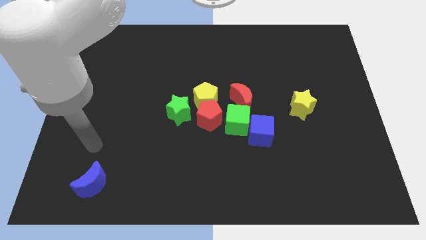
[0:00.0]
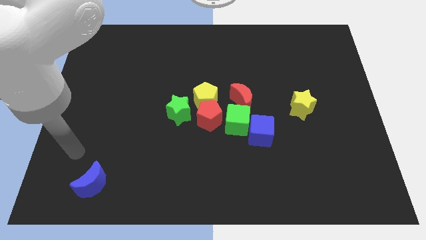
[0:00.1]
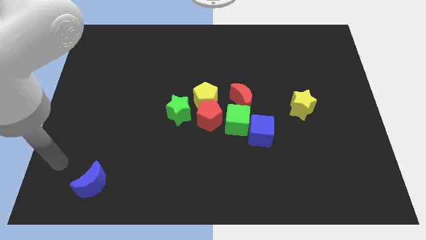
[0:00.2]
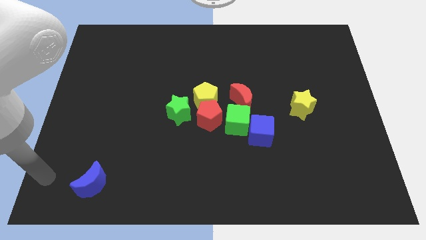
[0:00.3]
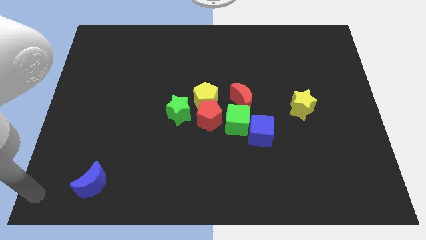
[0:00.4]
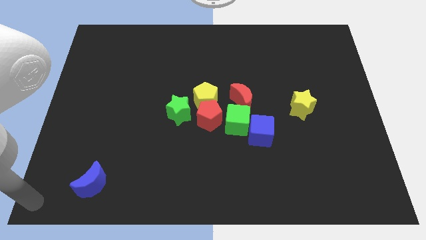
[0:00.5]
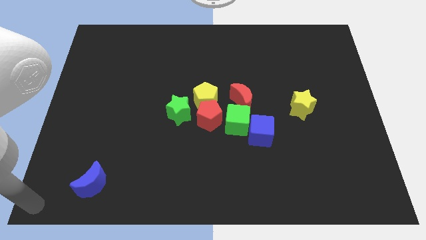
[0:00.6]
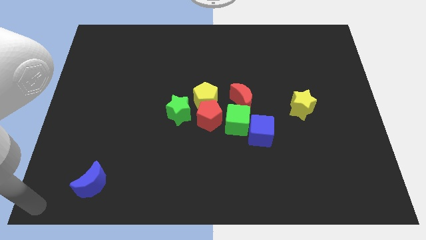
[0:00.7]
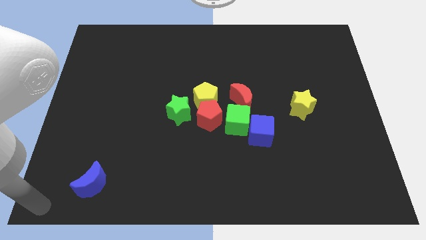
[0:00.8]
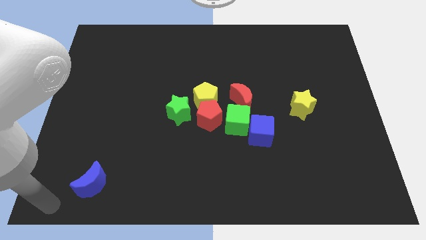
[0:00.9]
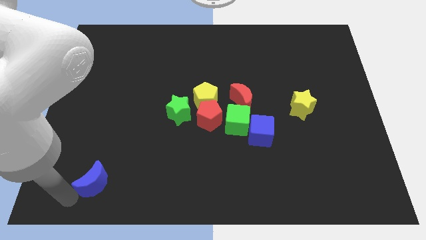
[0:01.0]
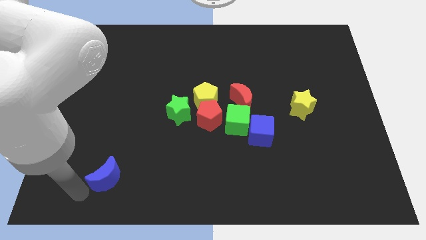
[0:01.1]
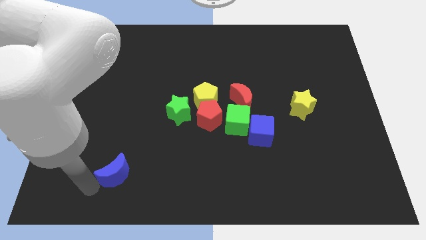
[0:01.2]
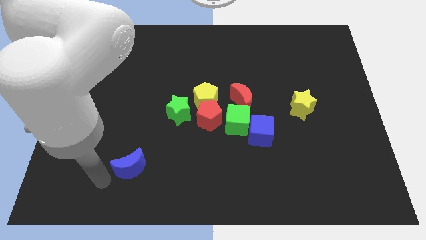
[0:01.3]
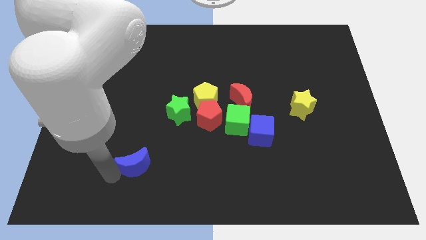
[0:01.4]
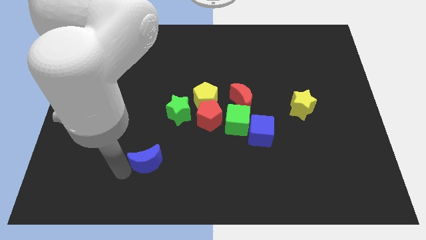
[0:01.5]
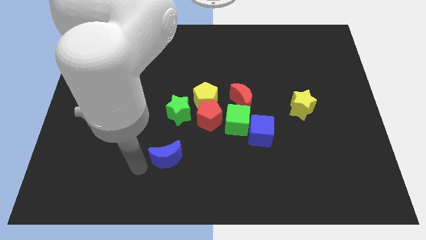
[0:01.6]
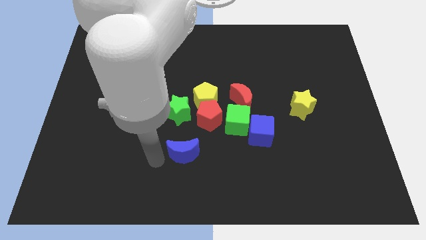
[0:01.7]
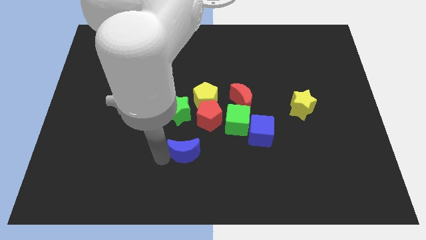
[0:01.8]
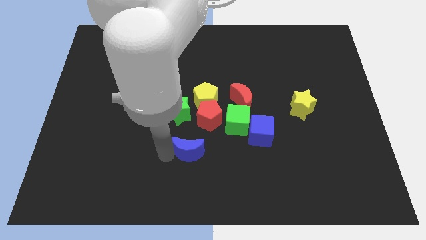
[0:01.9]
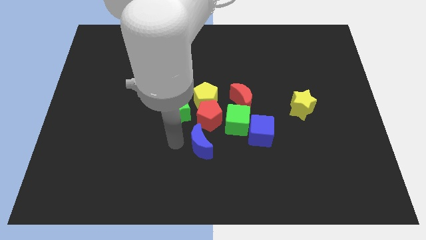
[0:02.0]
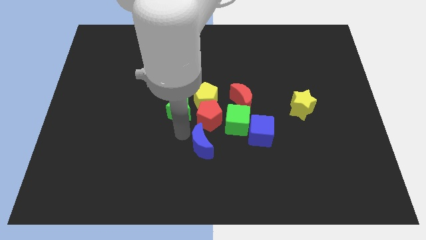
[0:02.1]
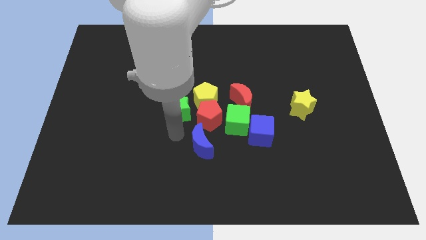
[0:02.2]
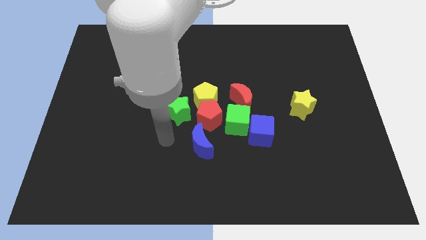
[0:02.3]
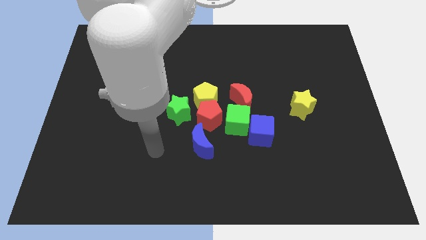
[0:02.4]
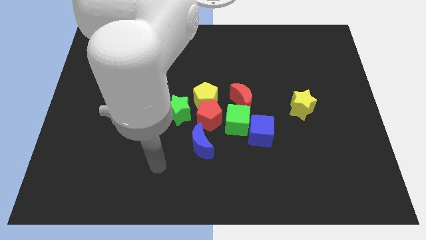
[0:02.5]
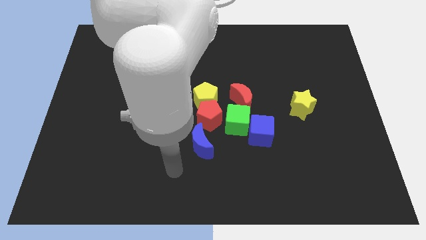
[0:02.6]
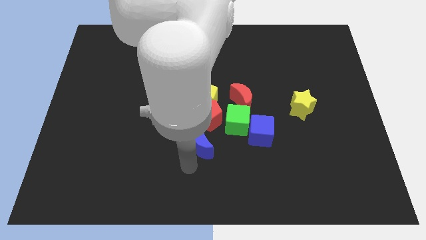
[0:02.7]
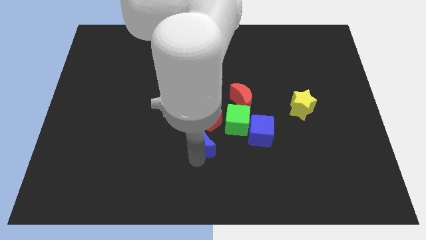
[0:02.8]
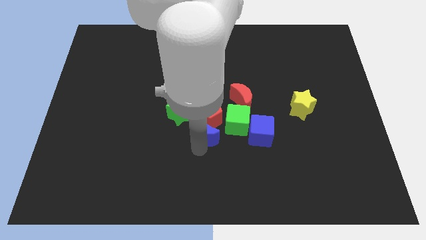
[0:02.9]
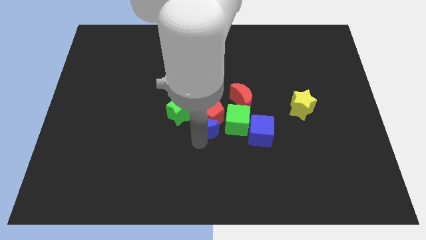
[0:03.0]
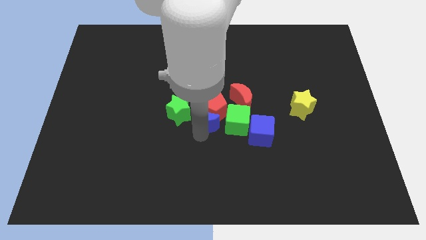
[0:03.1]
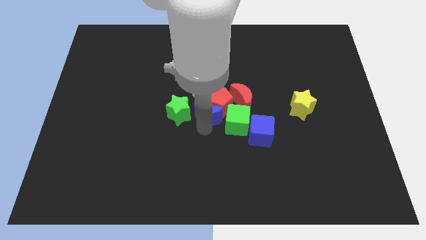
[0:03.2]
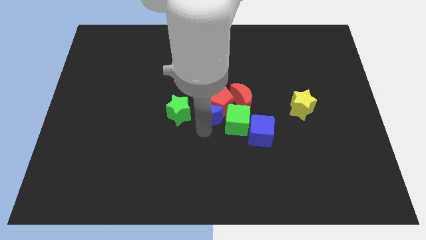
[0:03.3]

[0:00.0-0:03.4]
push blue moon in to red pentagon

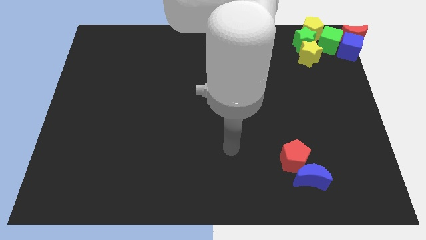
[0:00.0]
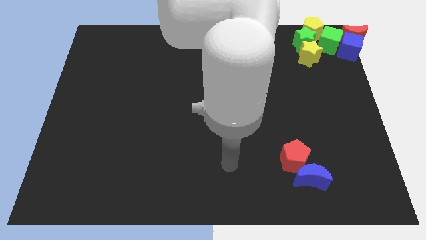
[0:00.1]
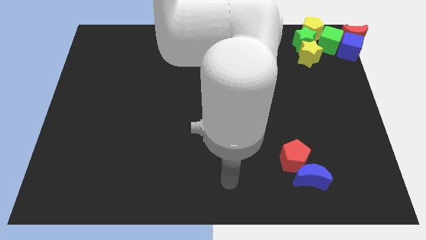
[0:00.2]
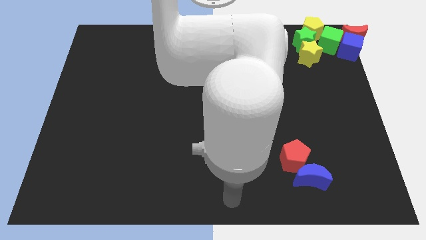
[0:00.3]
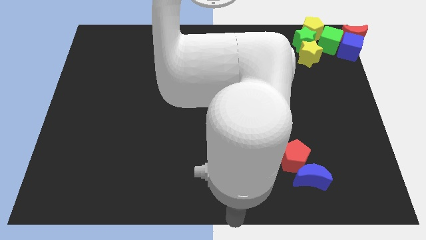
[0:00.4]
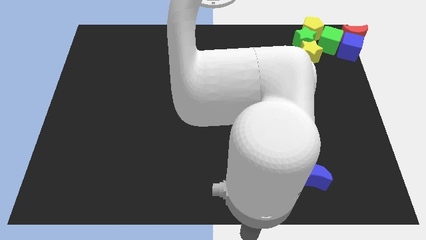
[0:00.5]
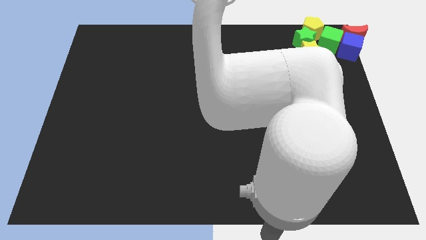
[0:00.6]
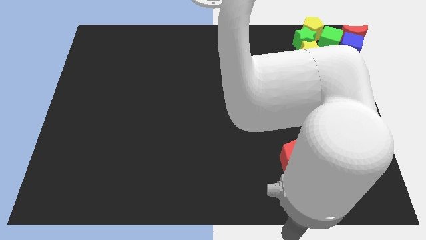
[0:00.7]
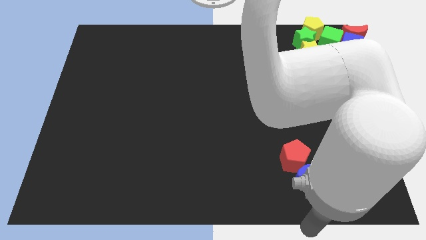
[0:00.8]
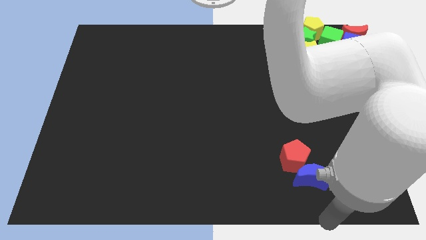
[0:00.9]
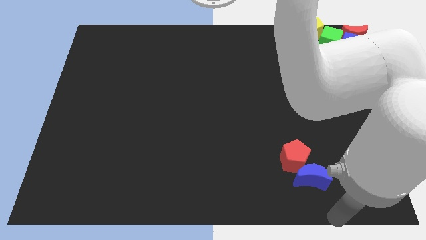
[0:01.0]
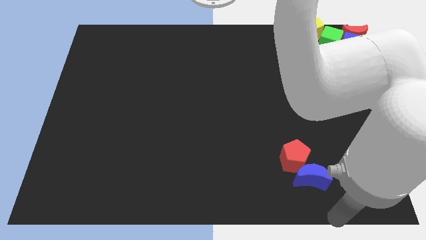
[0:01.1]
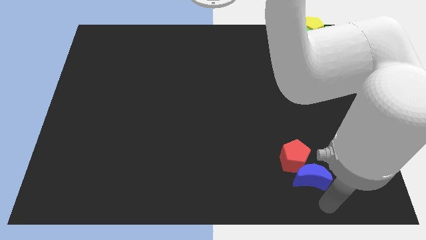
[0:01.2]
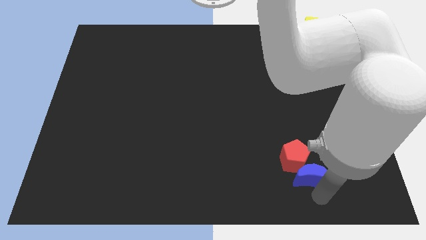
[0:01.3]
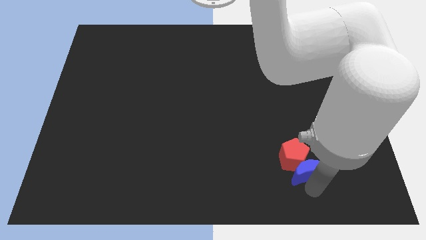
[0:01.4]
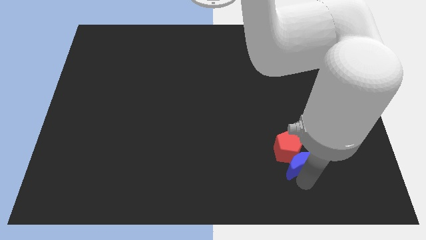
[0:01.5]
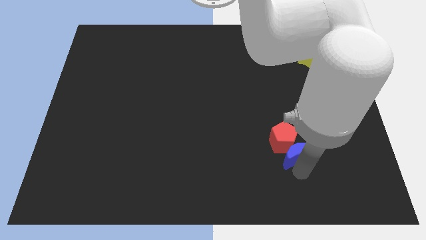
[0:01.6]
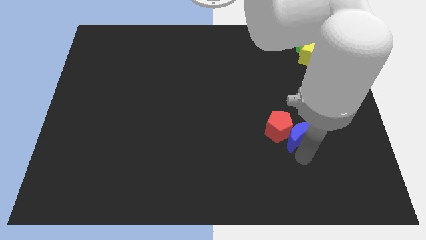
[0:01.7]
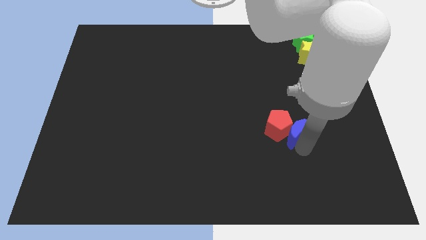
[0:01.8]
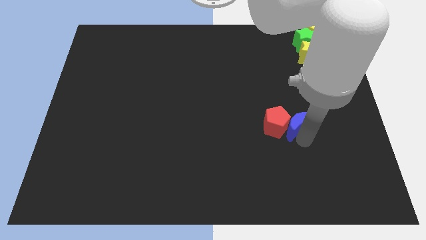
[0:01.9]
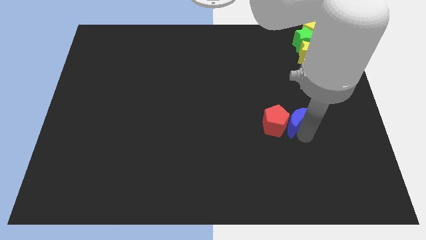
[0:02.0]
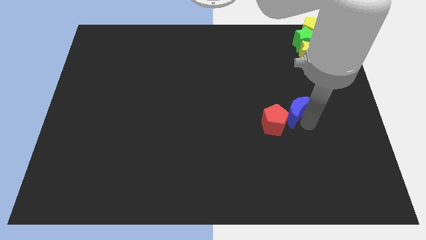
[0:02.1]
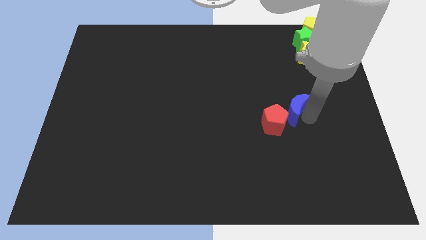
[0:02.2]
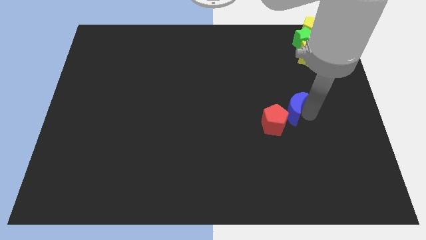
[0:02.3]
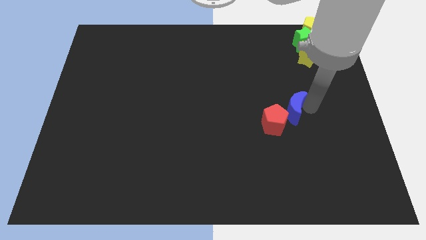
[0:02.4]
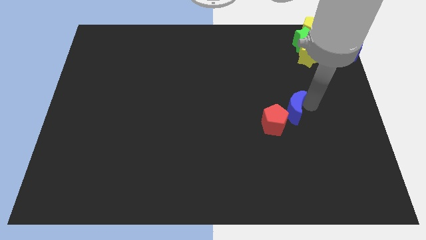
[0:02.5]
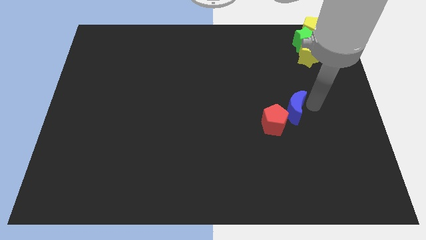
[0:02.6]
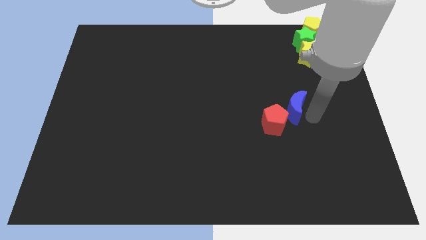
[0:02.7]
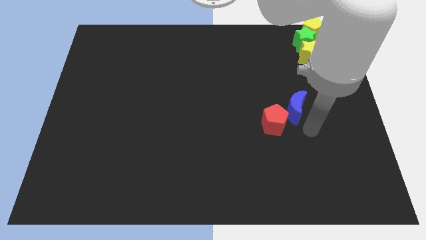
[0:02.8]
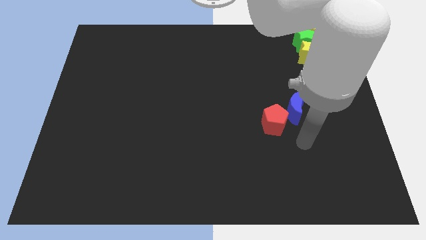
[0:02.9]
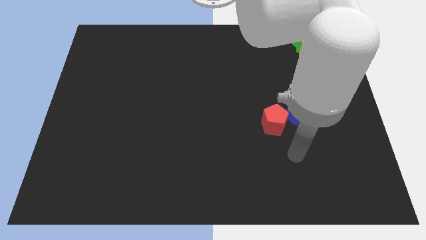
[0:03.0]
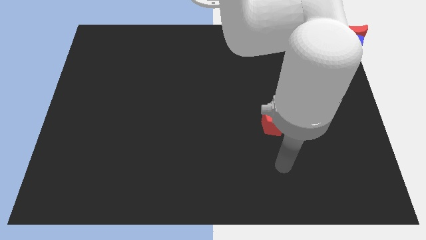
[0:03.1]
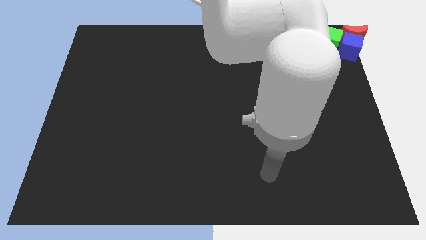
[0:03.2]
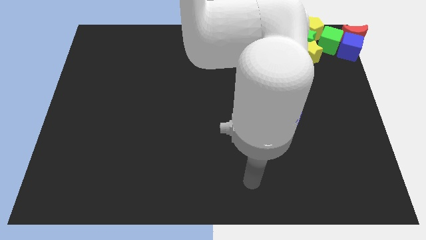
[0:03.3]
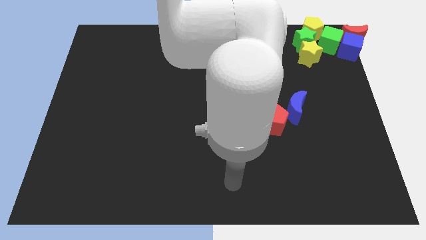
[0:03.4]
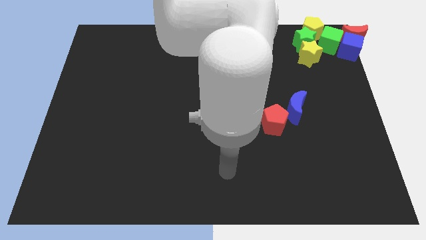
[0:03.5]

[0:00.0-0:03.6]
move the blue moon towards the top right side of the board

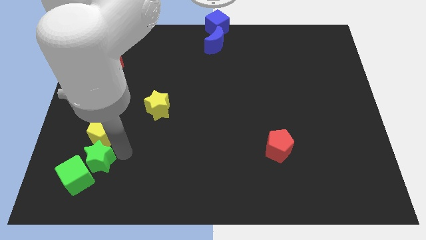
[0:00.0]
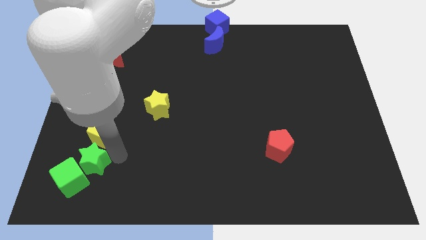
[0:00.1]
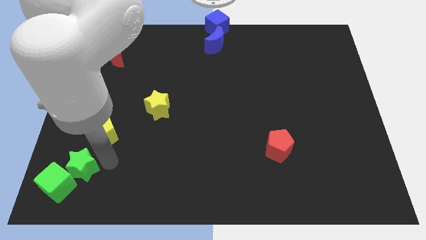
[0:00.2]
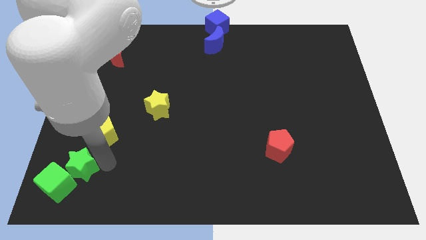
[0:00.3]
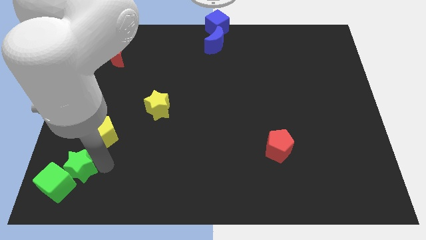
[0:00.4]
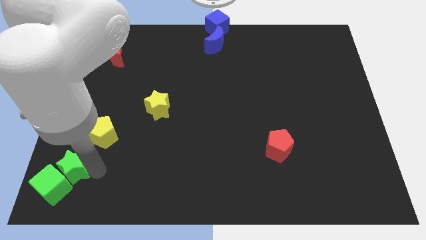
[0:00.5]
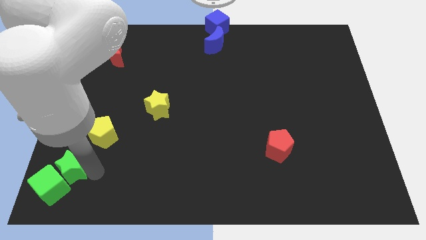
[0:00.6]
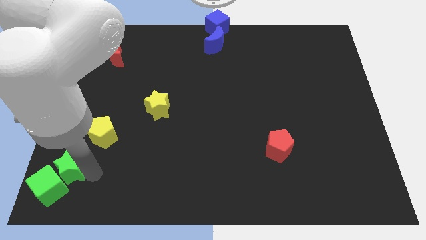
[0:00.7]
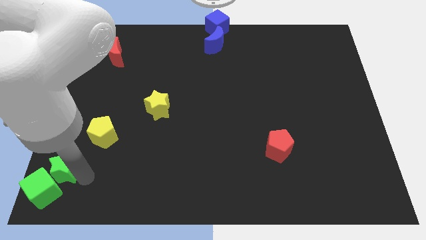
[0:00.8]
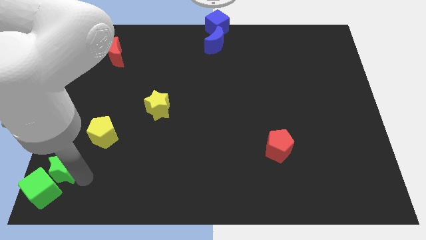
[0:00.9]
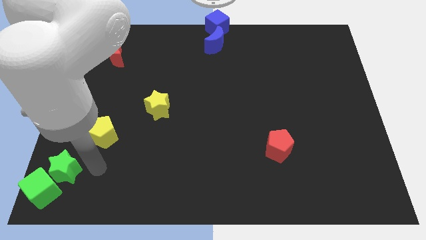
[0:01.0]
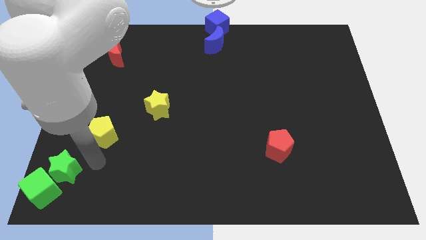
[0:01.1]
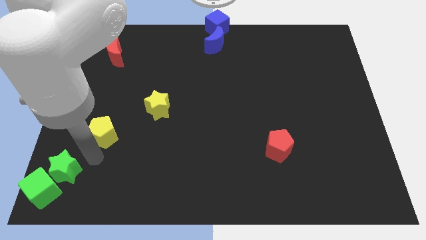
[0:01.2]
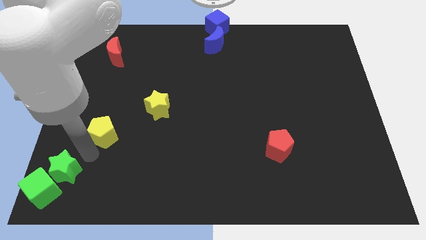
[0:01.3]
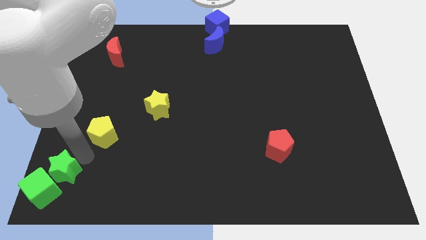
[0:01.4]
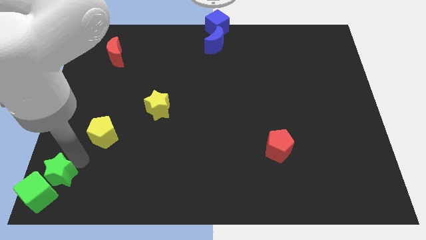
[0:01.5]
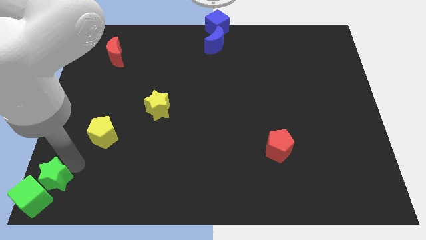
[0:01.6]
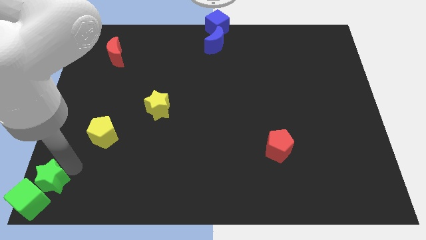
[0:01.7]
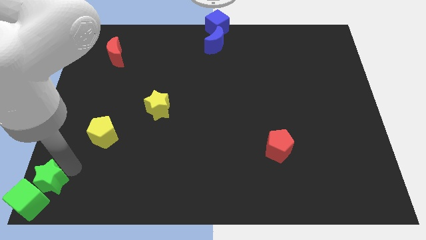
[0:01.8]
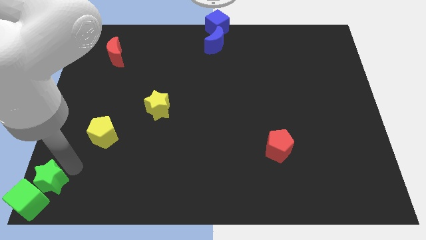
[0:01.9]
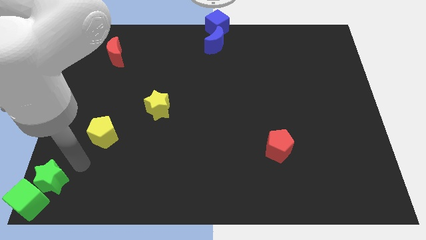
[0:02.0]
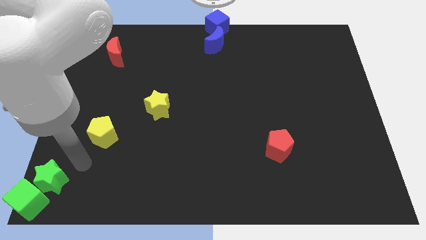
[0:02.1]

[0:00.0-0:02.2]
move green star along with green cube to the left bottom corner
